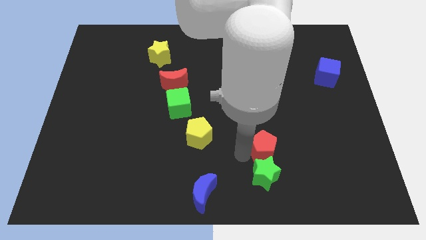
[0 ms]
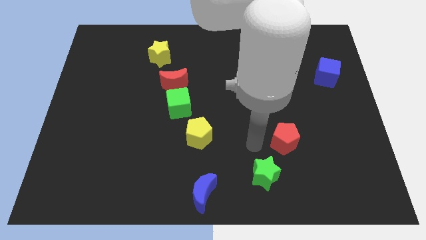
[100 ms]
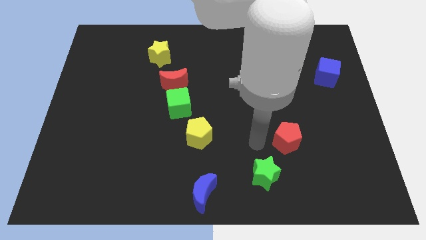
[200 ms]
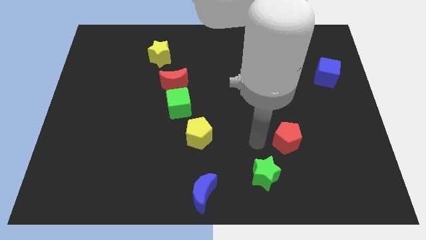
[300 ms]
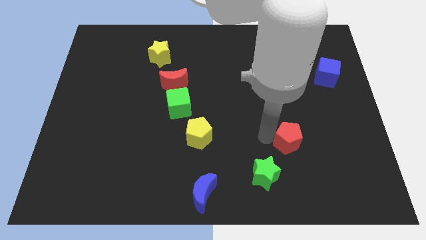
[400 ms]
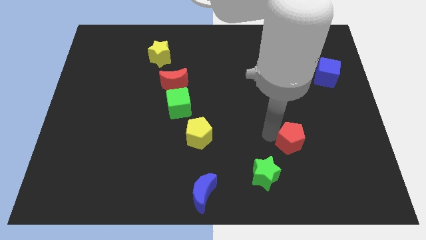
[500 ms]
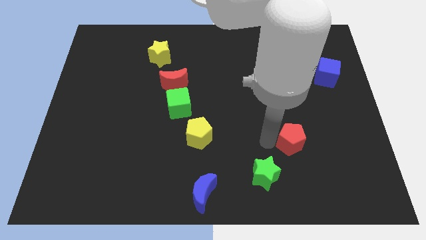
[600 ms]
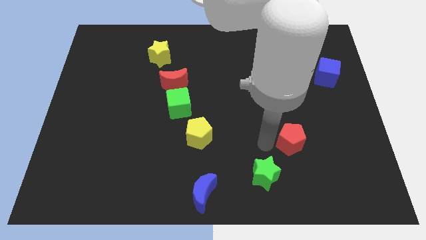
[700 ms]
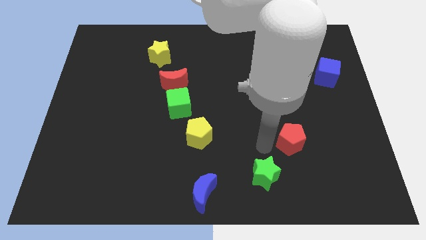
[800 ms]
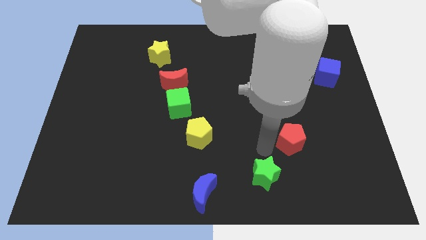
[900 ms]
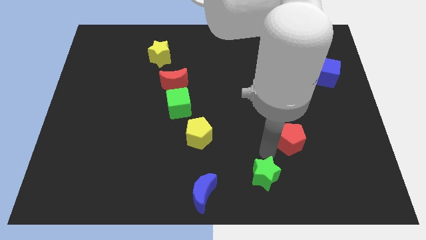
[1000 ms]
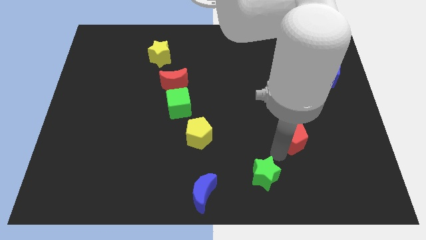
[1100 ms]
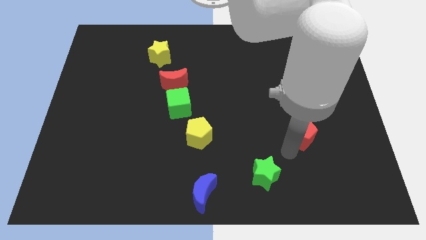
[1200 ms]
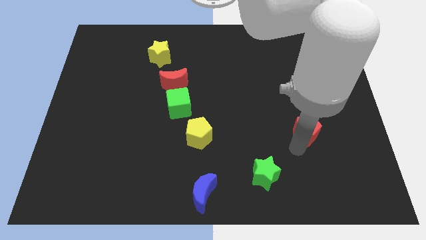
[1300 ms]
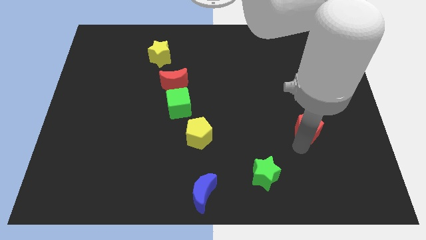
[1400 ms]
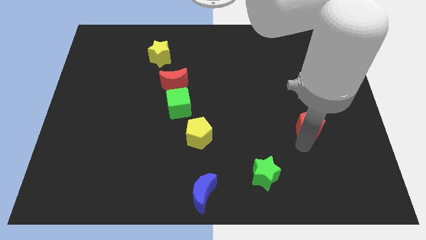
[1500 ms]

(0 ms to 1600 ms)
move the red pentagon away from the top side of the green star

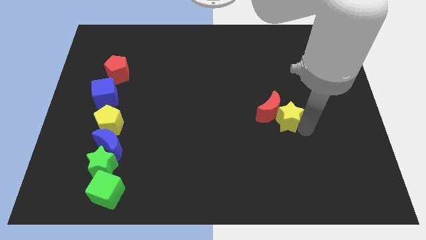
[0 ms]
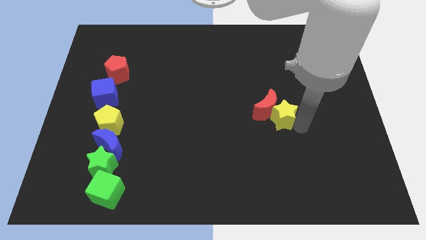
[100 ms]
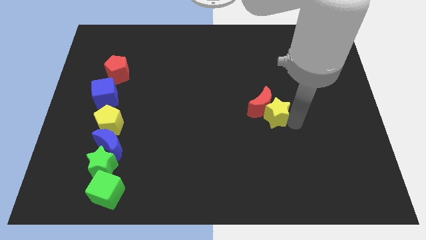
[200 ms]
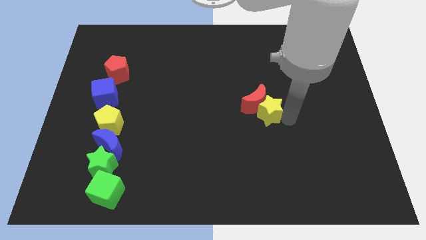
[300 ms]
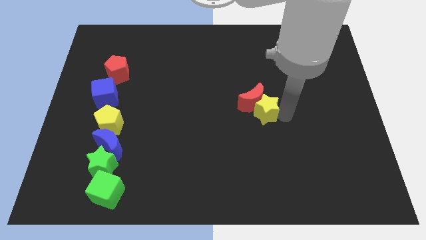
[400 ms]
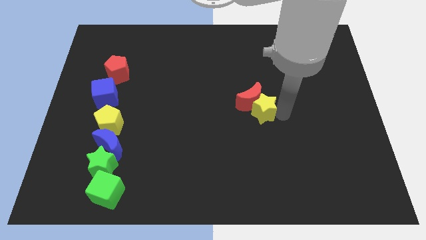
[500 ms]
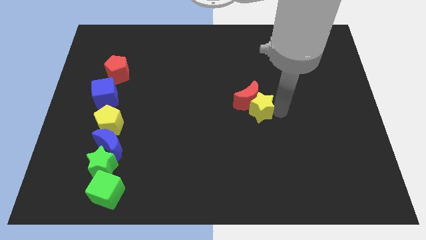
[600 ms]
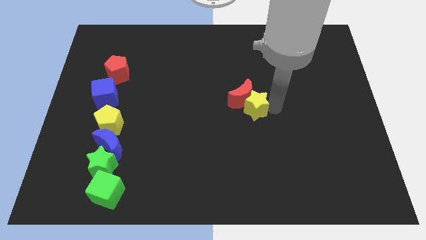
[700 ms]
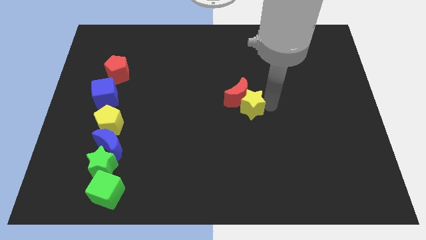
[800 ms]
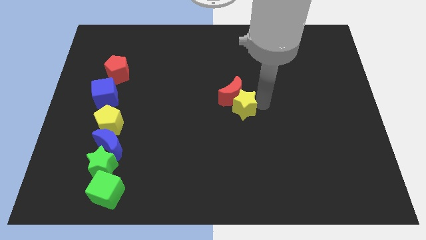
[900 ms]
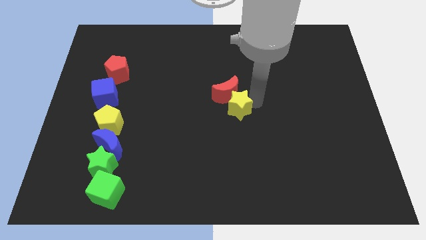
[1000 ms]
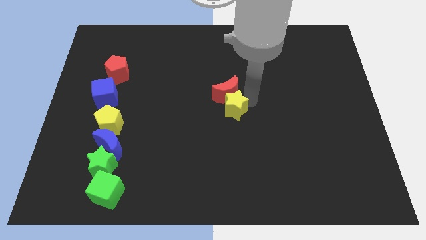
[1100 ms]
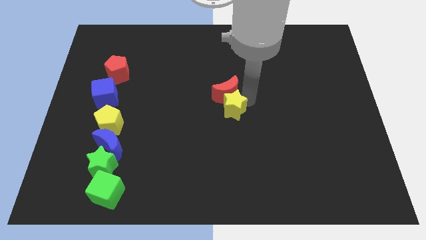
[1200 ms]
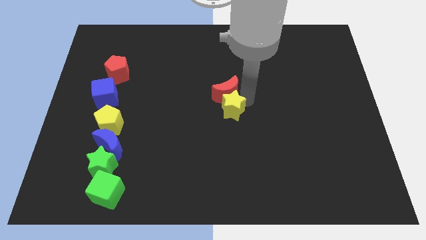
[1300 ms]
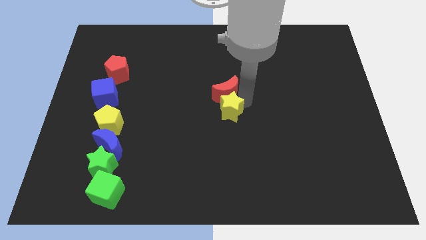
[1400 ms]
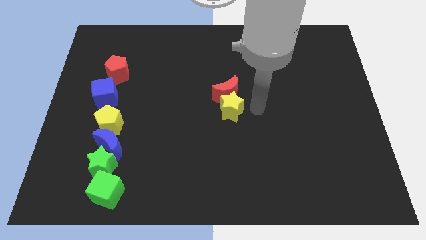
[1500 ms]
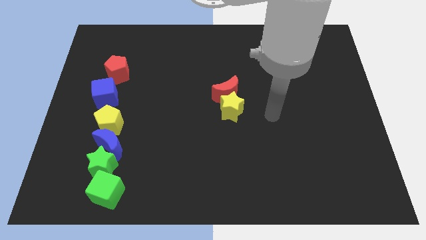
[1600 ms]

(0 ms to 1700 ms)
place the red moon and yellow star at the center of the board

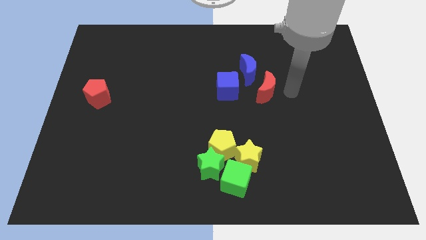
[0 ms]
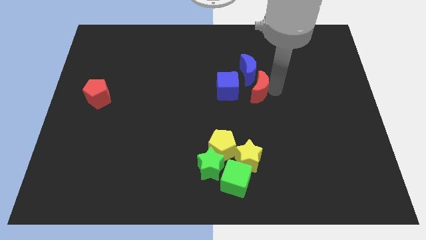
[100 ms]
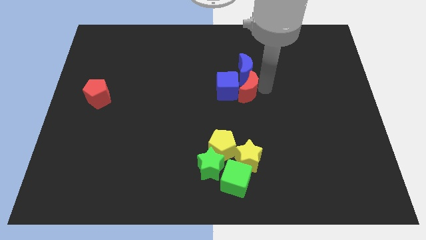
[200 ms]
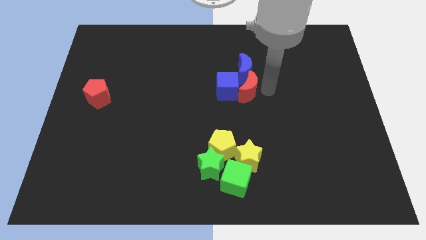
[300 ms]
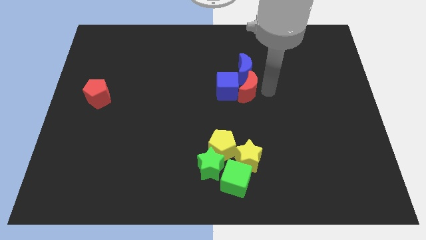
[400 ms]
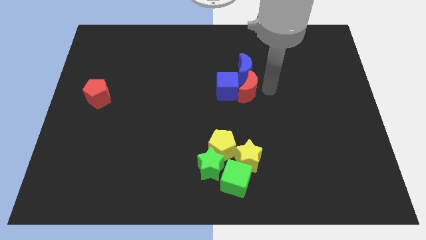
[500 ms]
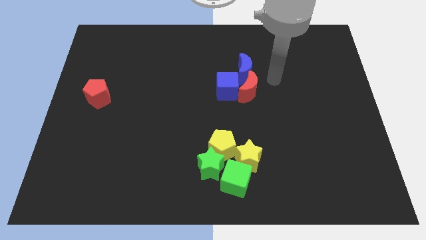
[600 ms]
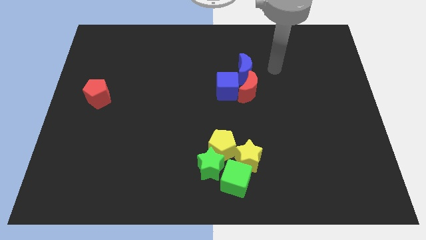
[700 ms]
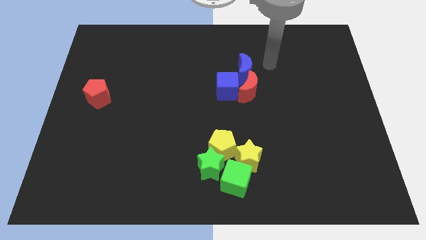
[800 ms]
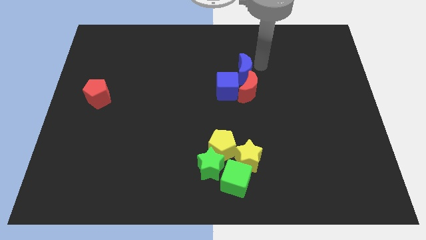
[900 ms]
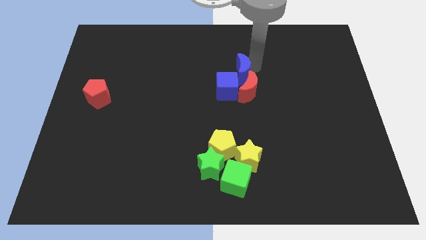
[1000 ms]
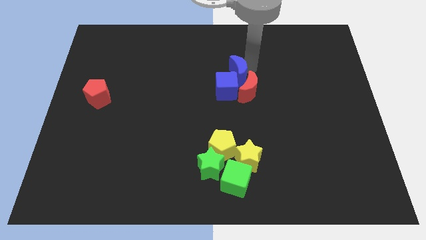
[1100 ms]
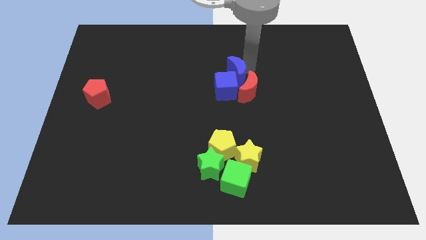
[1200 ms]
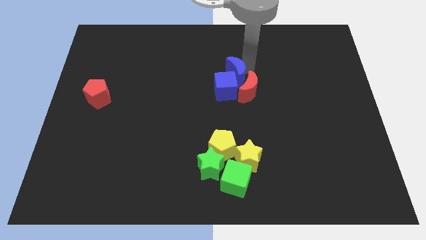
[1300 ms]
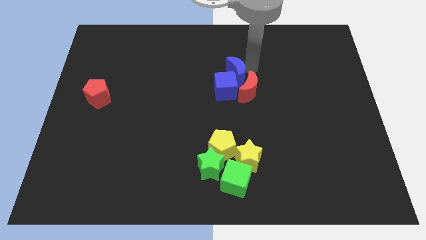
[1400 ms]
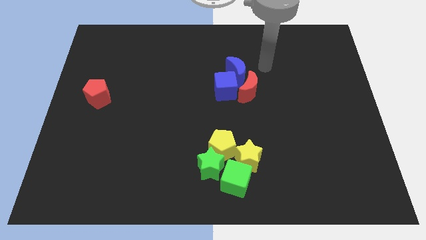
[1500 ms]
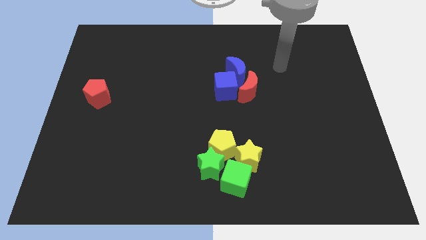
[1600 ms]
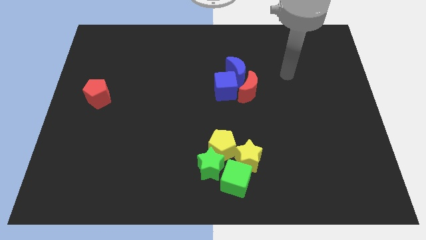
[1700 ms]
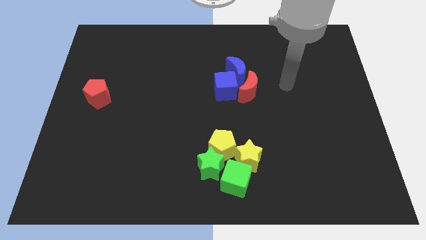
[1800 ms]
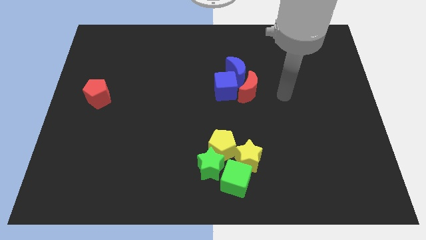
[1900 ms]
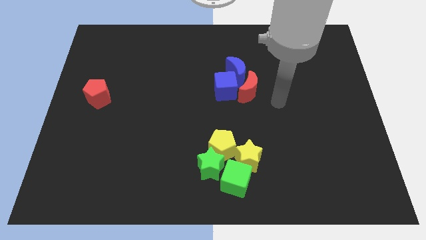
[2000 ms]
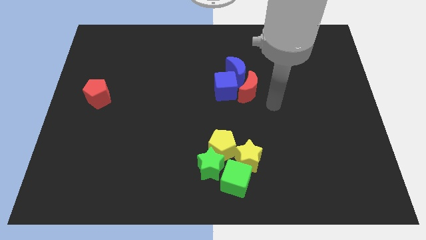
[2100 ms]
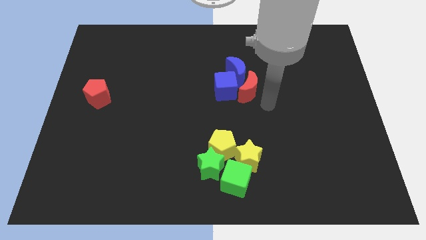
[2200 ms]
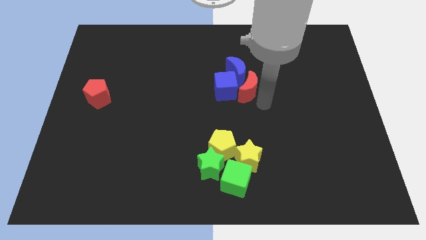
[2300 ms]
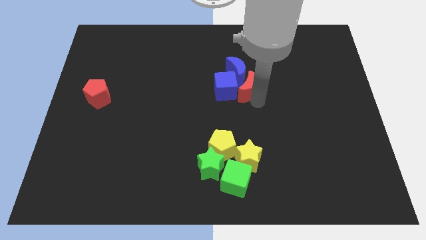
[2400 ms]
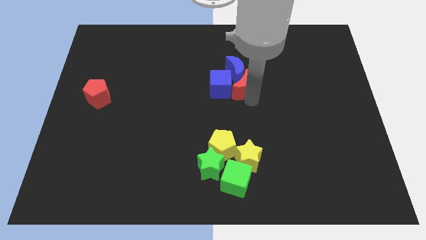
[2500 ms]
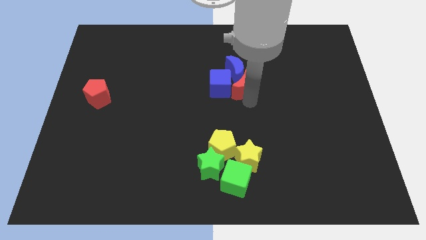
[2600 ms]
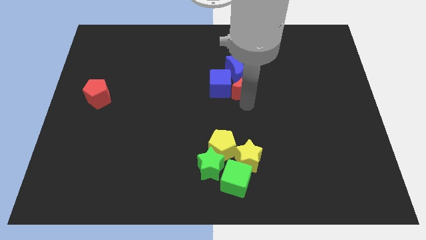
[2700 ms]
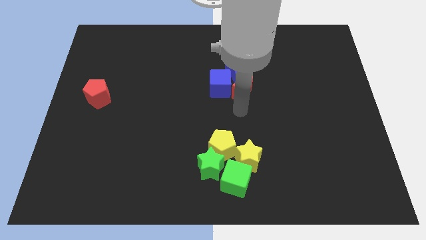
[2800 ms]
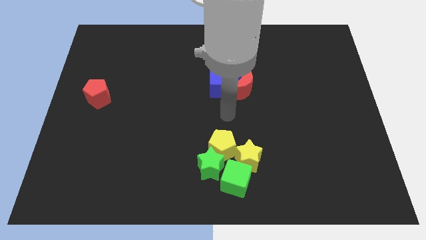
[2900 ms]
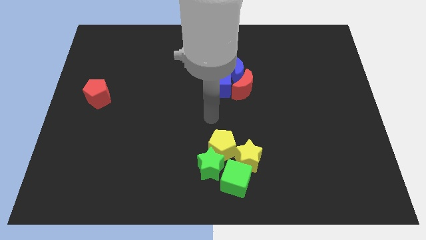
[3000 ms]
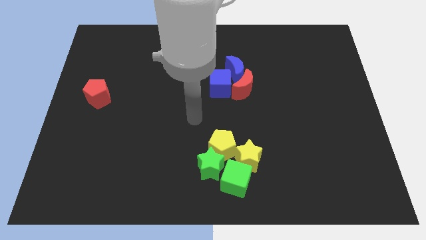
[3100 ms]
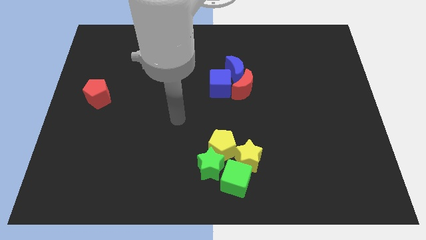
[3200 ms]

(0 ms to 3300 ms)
place the group of both blue blocks and red moon vertically above the green and yellow blocks

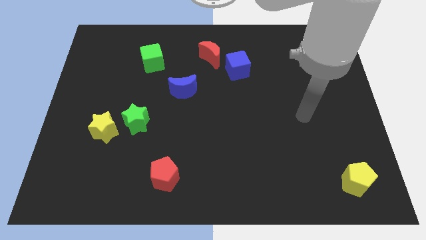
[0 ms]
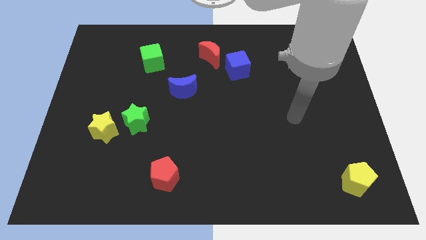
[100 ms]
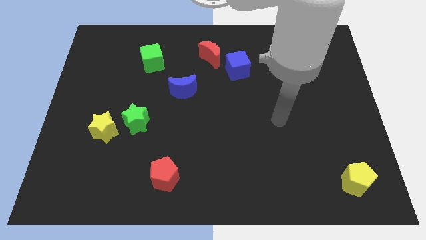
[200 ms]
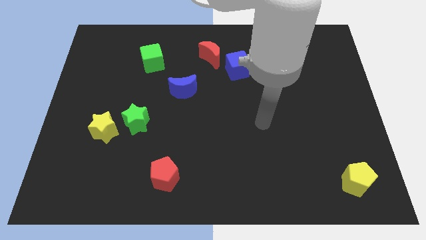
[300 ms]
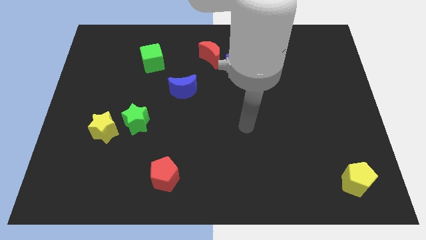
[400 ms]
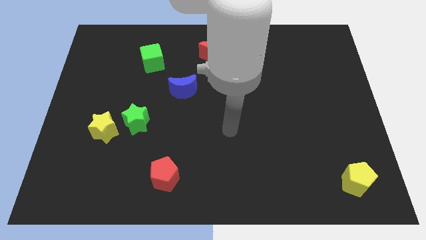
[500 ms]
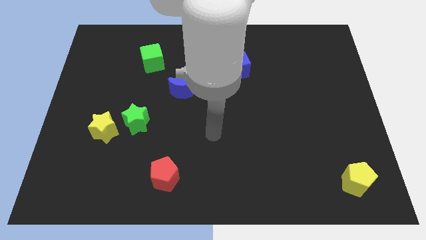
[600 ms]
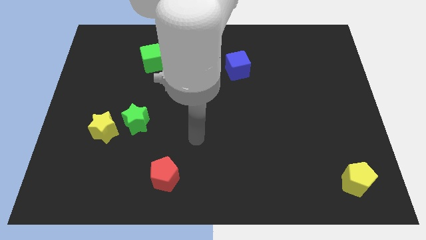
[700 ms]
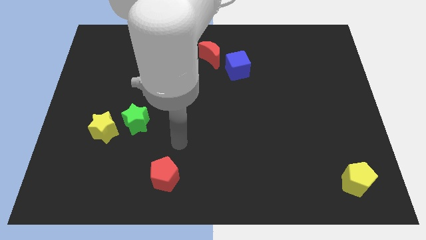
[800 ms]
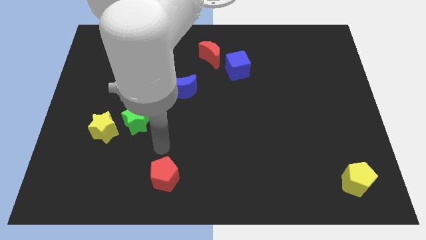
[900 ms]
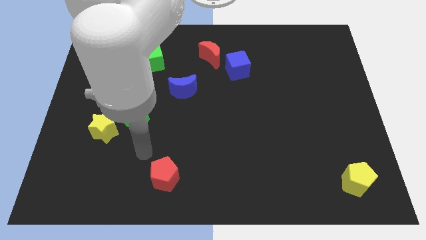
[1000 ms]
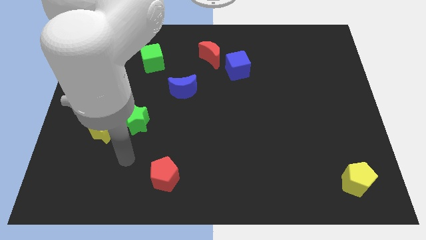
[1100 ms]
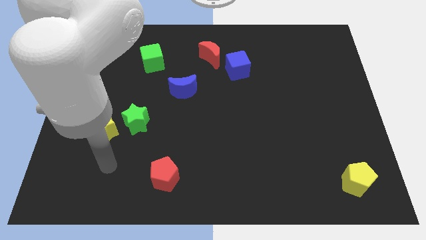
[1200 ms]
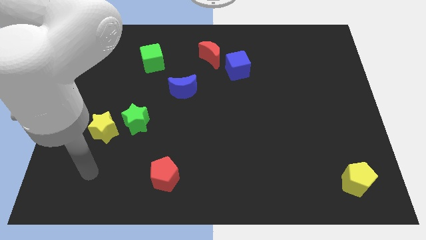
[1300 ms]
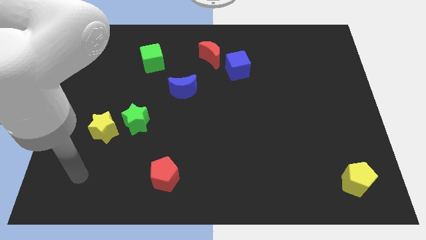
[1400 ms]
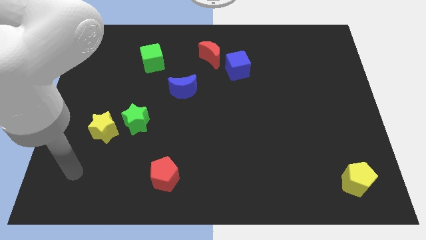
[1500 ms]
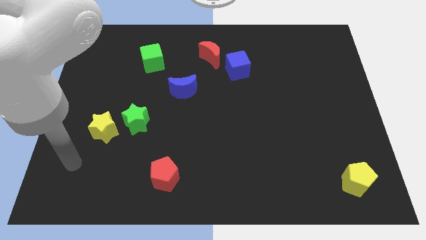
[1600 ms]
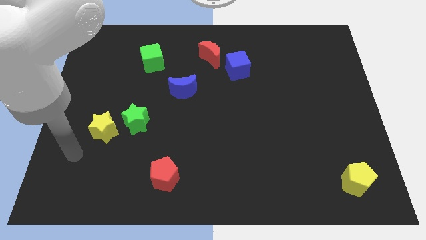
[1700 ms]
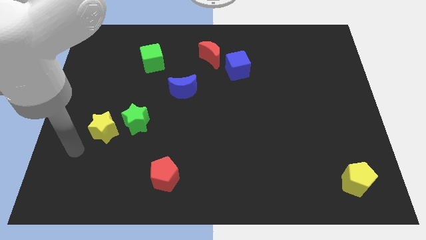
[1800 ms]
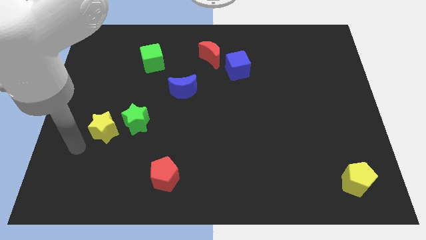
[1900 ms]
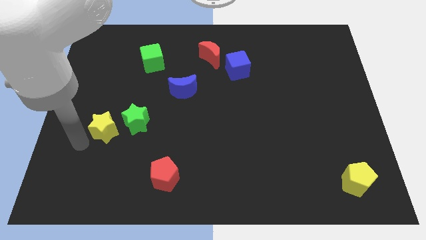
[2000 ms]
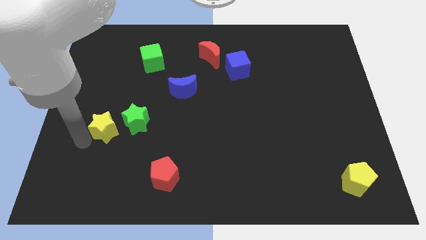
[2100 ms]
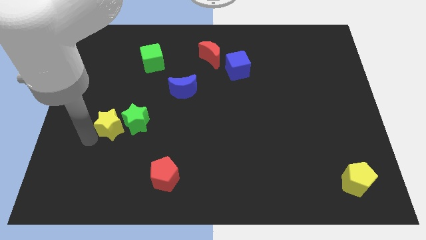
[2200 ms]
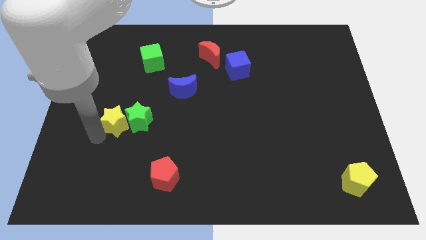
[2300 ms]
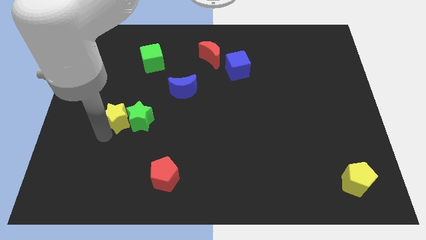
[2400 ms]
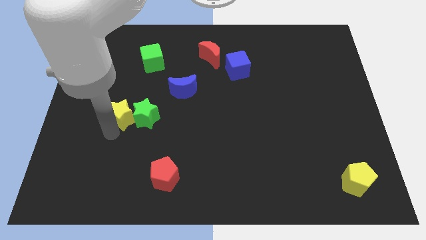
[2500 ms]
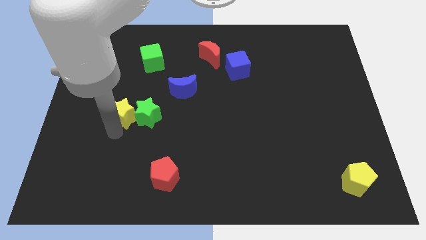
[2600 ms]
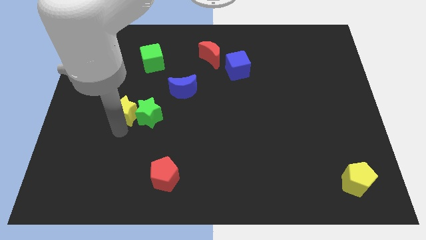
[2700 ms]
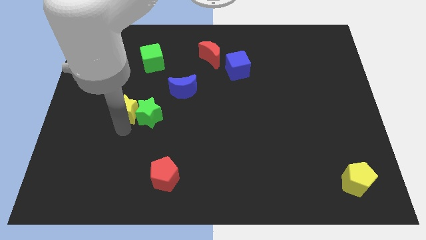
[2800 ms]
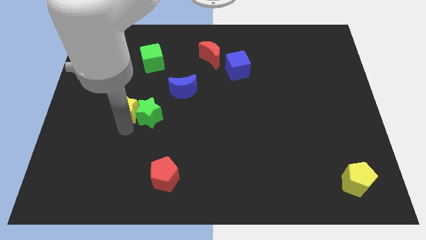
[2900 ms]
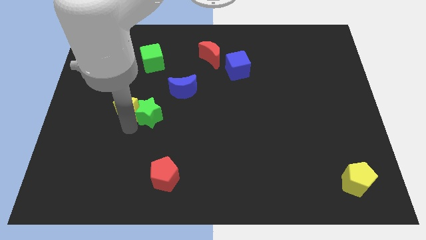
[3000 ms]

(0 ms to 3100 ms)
push the stars towards the center of the board
